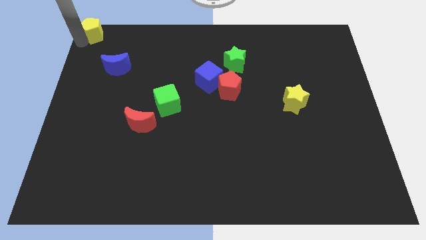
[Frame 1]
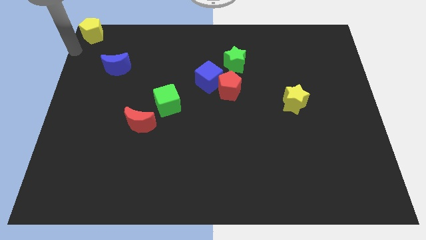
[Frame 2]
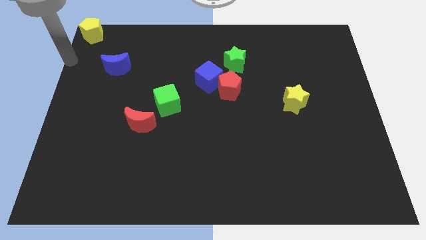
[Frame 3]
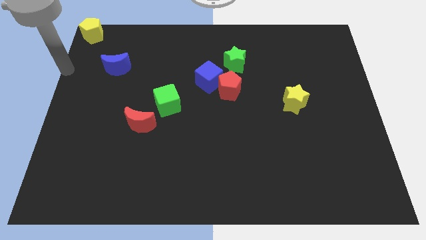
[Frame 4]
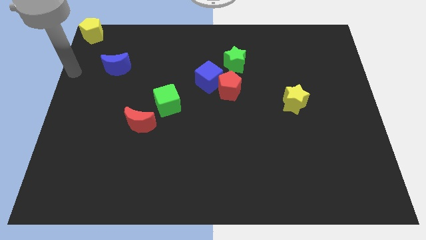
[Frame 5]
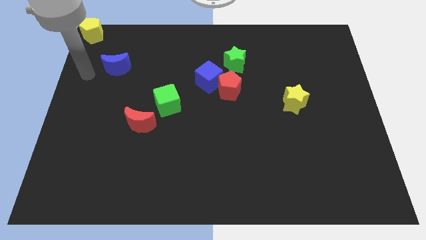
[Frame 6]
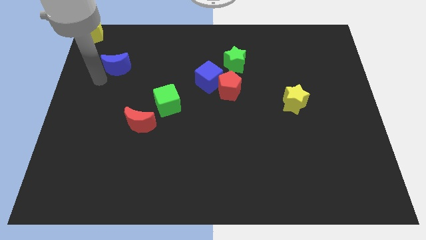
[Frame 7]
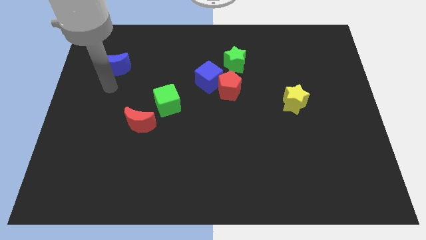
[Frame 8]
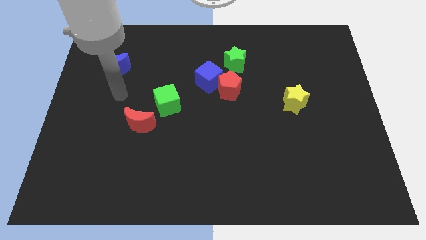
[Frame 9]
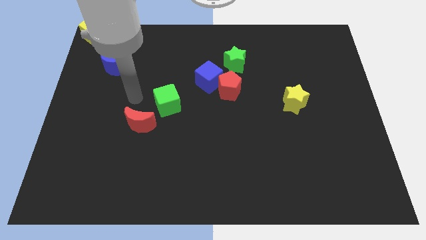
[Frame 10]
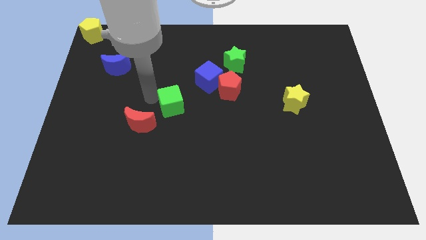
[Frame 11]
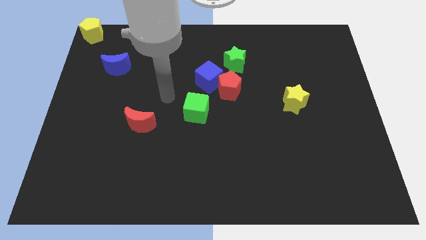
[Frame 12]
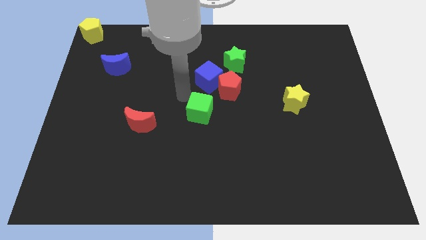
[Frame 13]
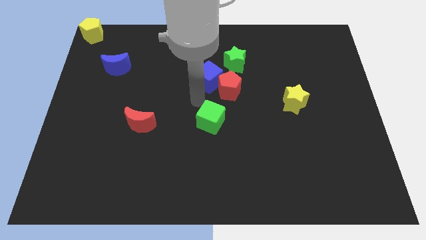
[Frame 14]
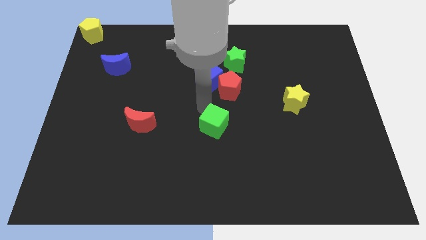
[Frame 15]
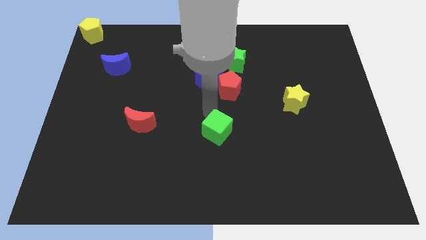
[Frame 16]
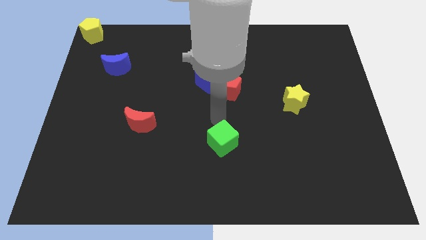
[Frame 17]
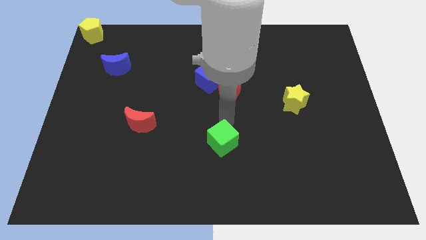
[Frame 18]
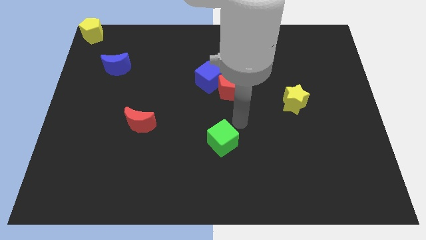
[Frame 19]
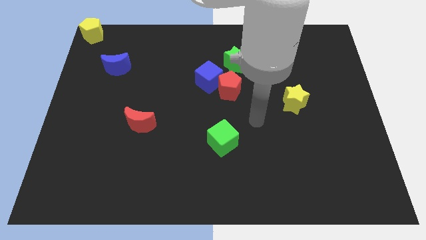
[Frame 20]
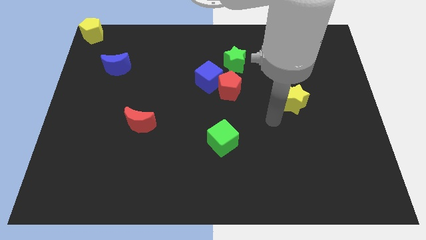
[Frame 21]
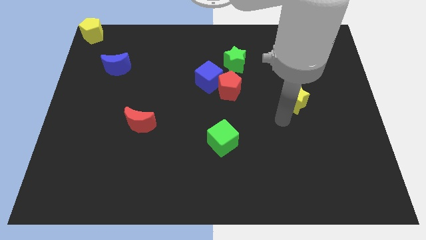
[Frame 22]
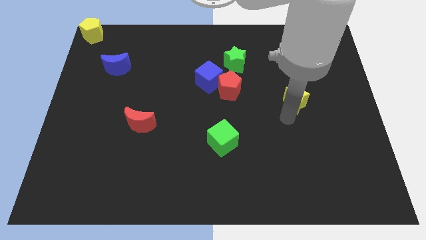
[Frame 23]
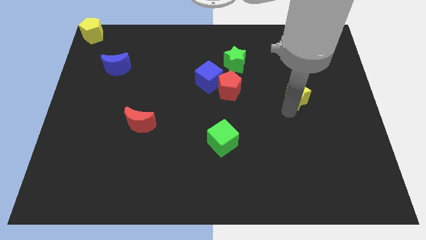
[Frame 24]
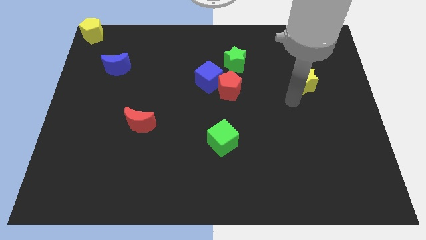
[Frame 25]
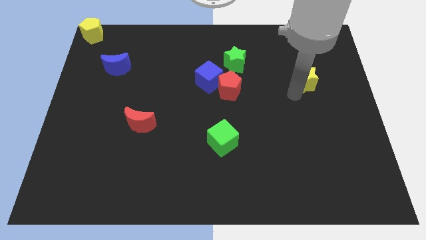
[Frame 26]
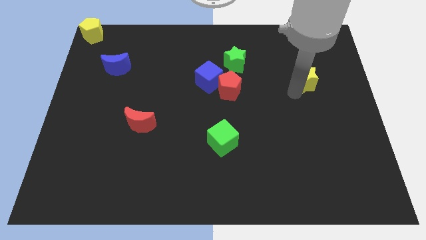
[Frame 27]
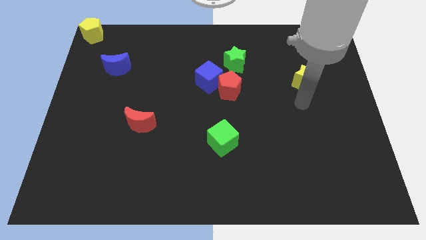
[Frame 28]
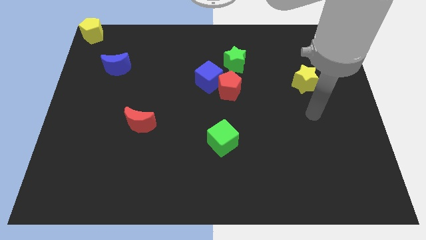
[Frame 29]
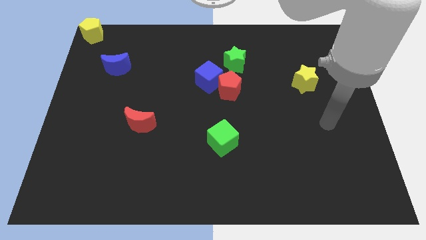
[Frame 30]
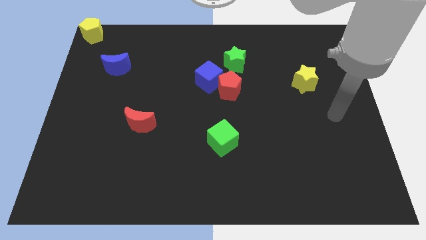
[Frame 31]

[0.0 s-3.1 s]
push the green cube and yellow star diagonal to each other

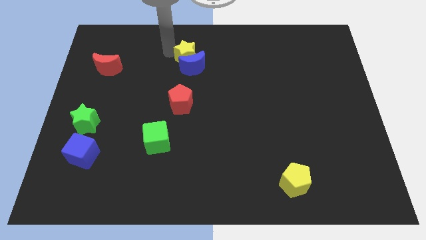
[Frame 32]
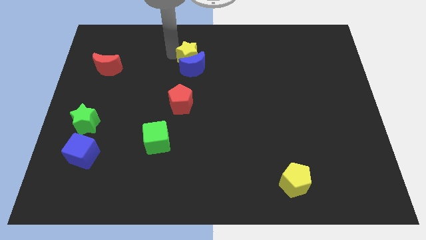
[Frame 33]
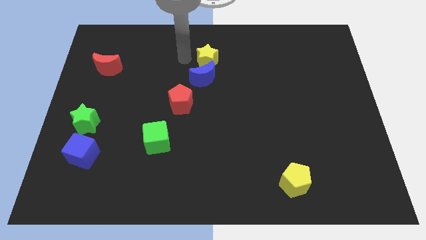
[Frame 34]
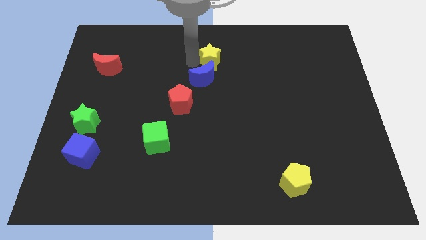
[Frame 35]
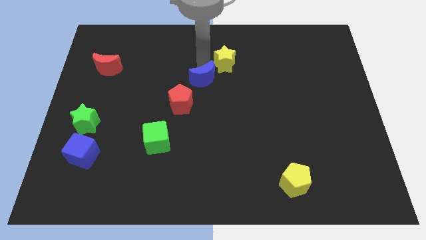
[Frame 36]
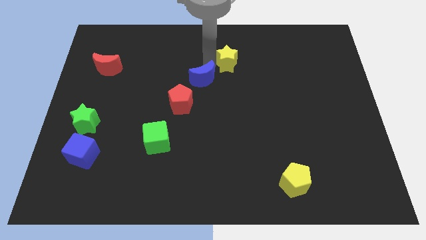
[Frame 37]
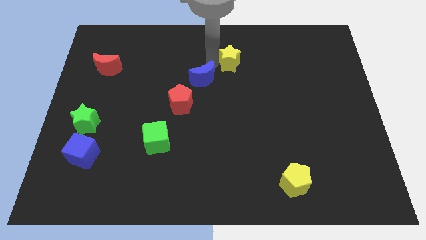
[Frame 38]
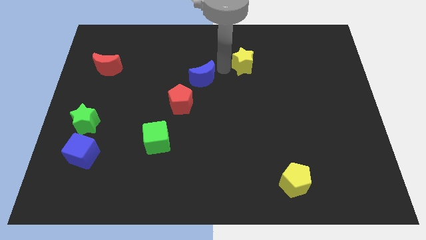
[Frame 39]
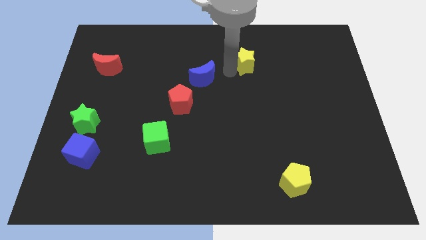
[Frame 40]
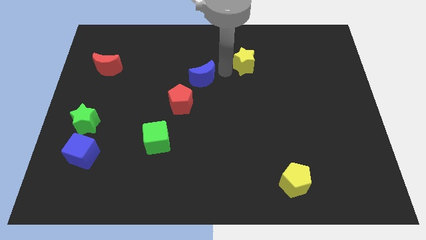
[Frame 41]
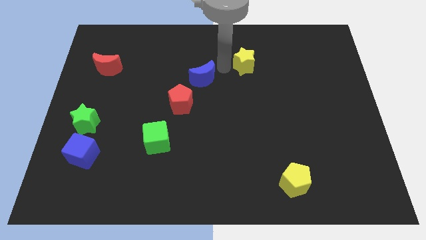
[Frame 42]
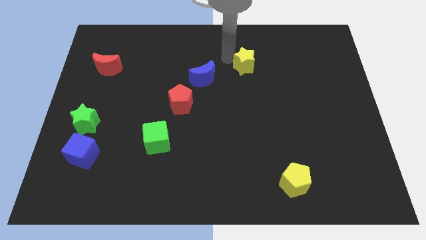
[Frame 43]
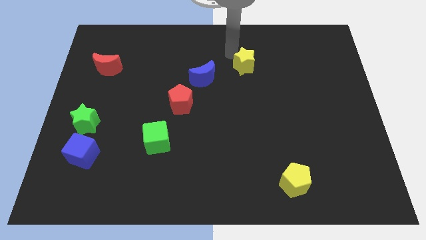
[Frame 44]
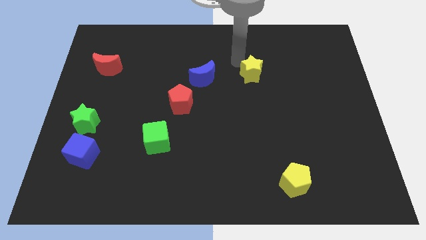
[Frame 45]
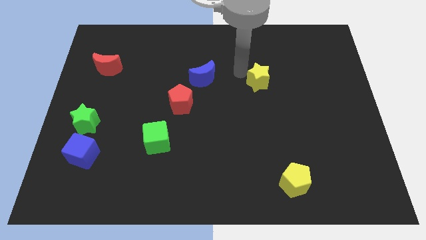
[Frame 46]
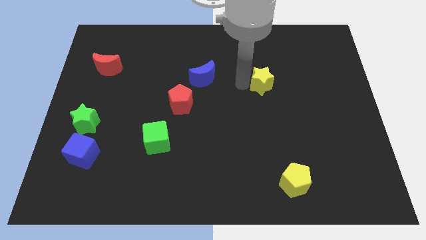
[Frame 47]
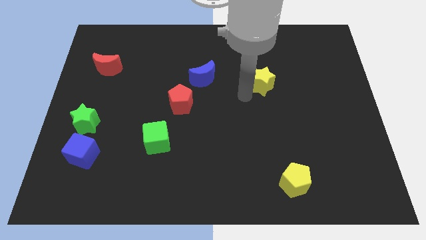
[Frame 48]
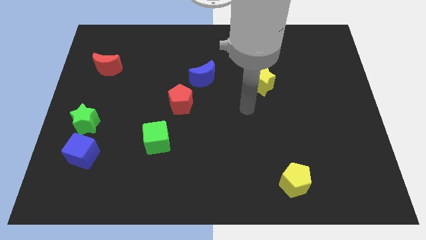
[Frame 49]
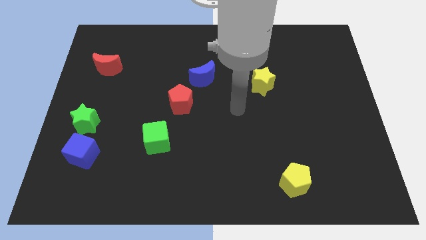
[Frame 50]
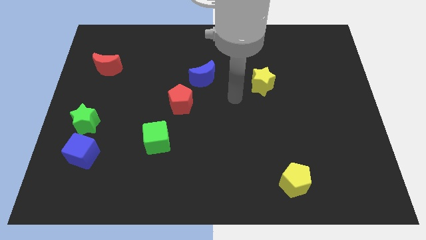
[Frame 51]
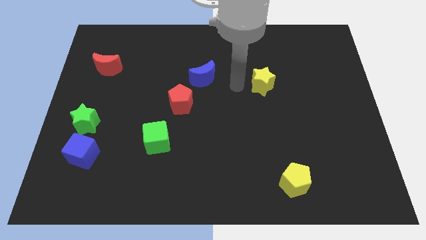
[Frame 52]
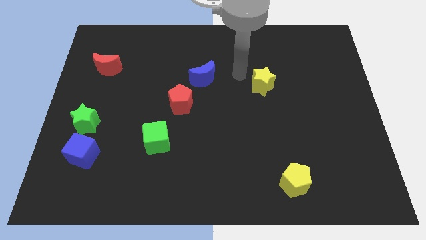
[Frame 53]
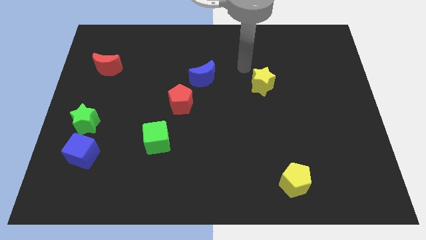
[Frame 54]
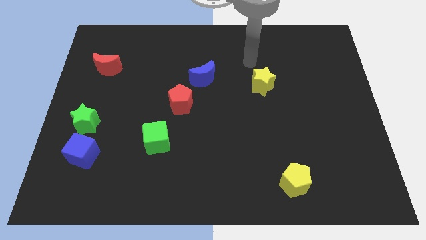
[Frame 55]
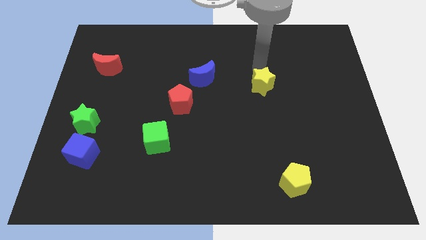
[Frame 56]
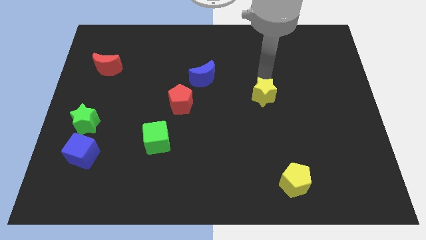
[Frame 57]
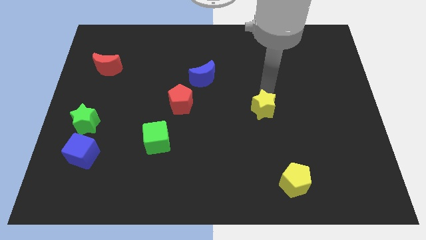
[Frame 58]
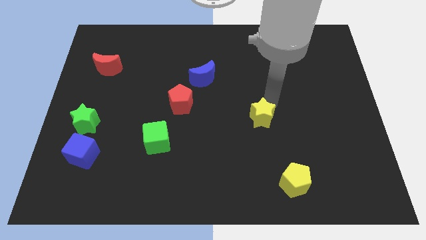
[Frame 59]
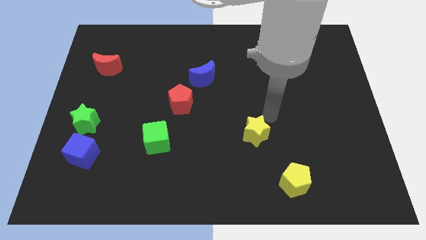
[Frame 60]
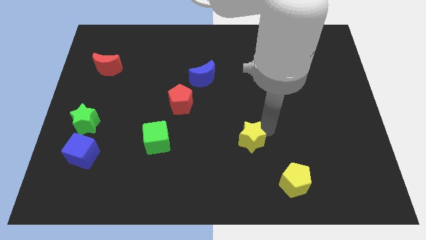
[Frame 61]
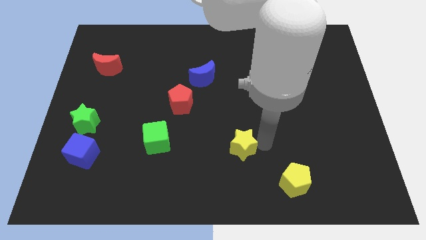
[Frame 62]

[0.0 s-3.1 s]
push the yellow star diagonal to the top of the yellow pentagon

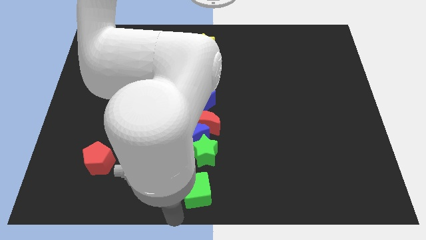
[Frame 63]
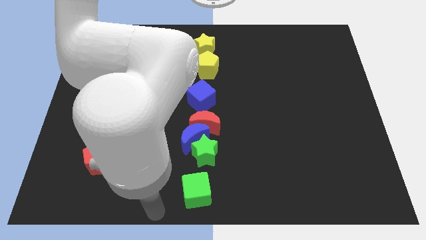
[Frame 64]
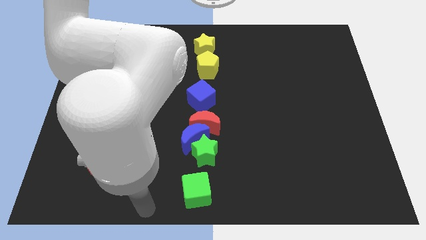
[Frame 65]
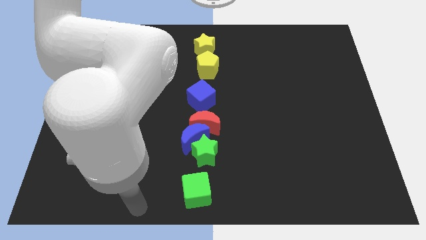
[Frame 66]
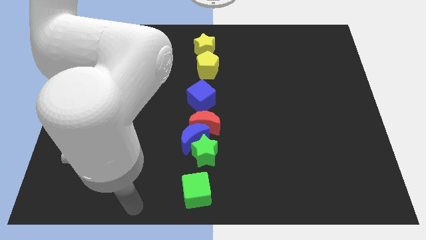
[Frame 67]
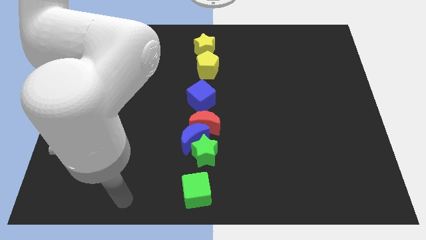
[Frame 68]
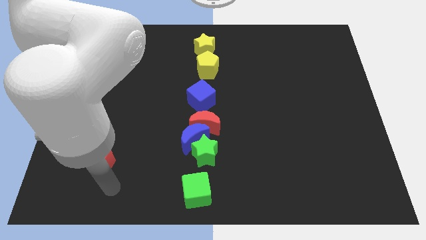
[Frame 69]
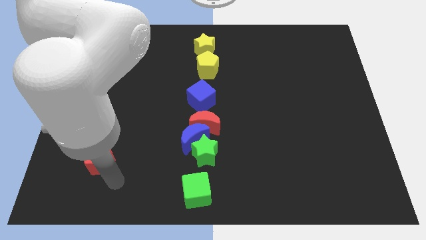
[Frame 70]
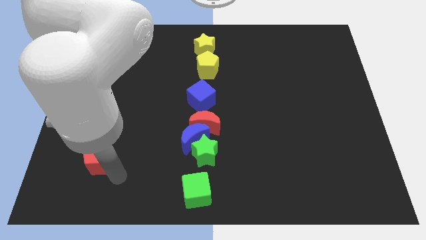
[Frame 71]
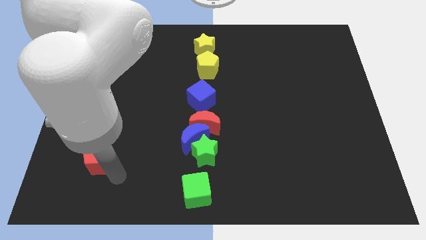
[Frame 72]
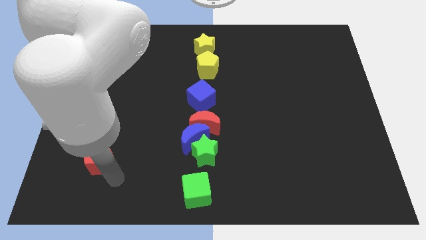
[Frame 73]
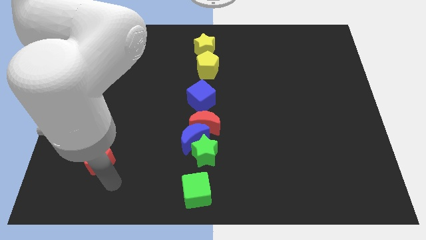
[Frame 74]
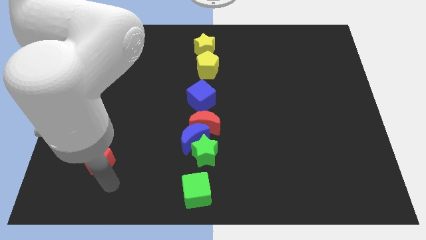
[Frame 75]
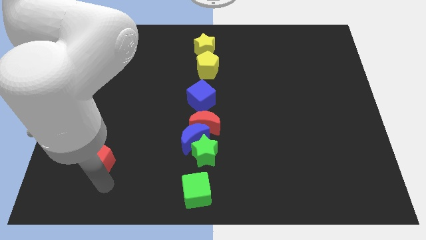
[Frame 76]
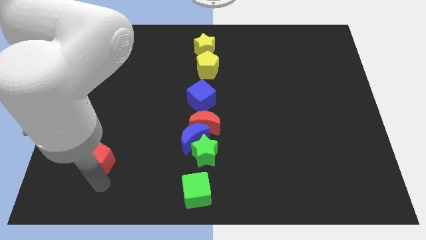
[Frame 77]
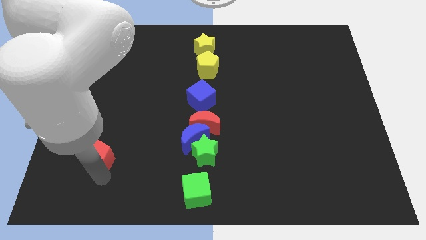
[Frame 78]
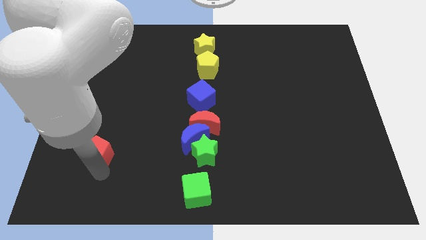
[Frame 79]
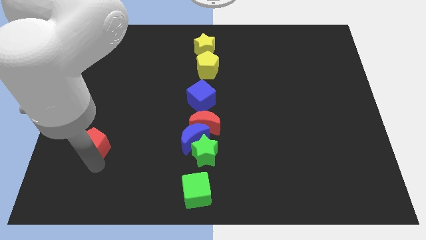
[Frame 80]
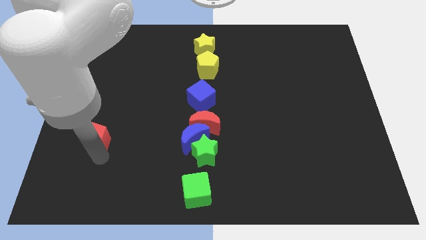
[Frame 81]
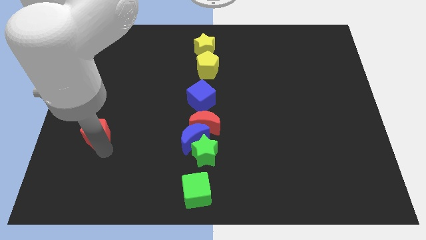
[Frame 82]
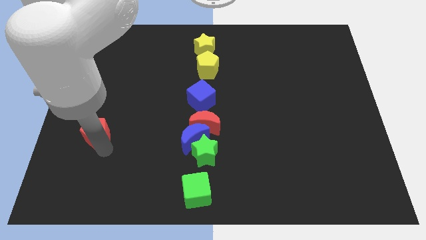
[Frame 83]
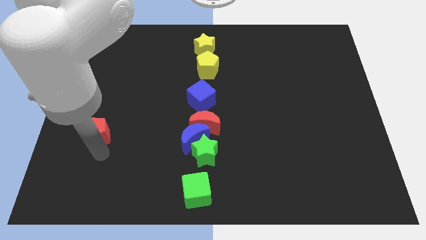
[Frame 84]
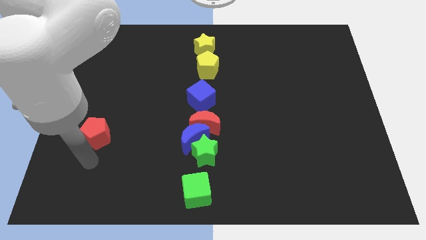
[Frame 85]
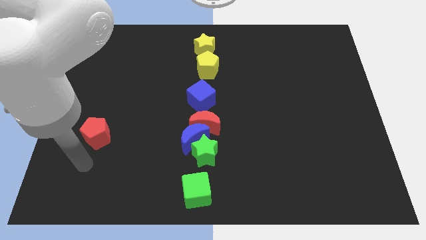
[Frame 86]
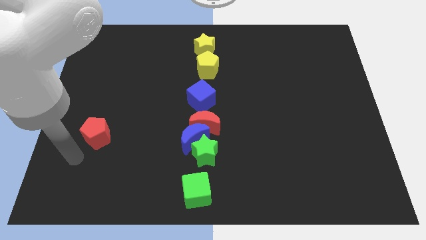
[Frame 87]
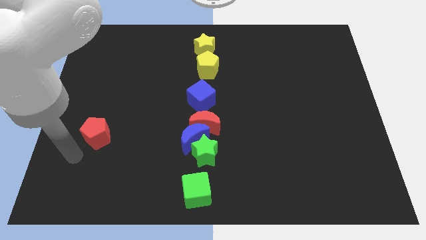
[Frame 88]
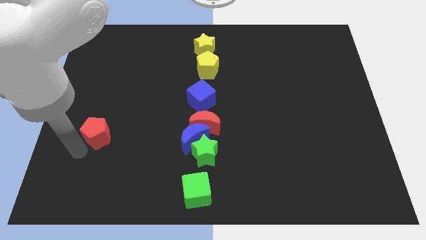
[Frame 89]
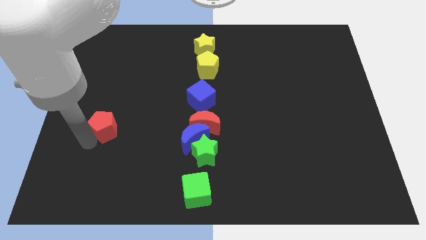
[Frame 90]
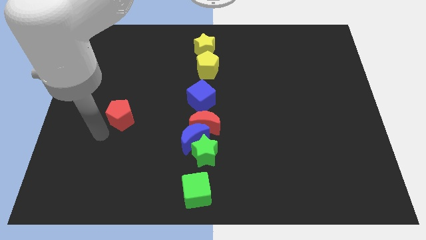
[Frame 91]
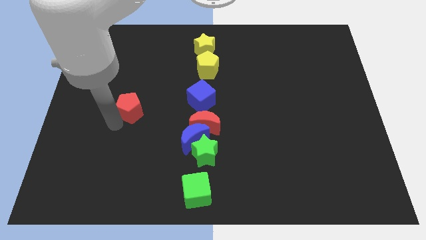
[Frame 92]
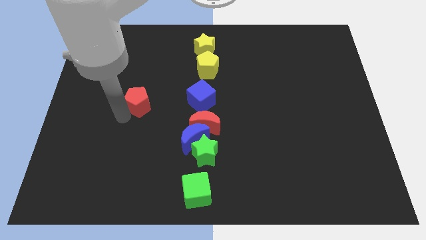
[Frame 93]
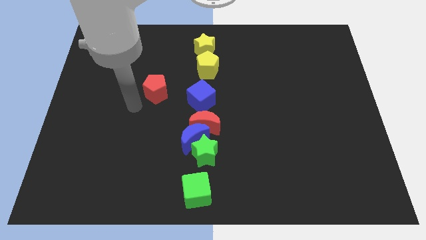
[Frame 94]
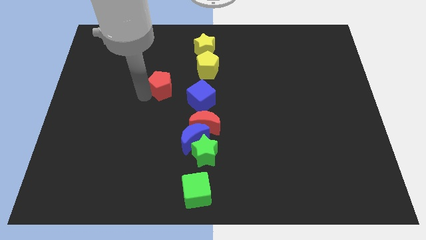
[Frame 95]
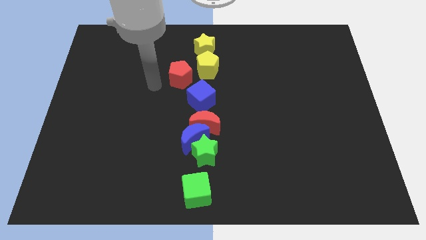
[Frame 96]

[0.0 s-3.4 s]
move the red pentagon towards the yellow pentagon
